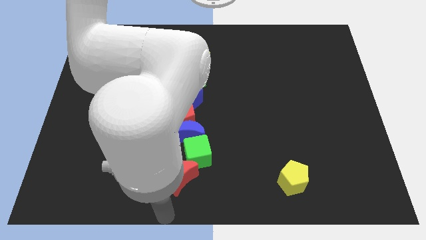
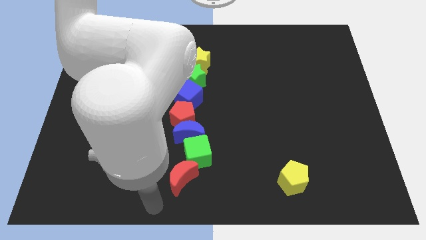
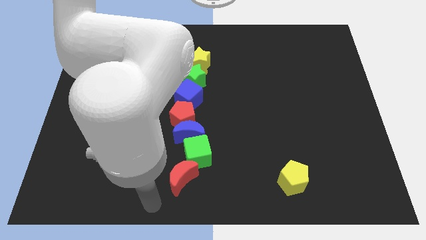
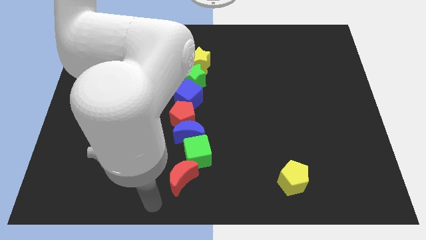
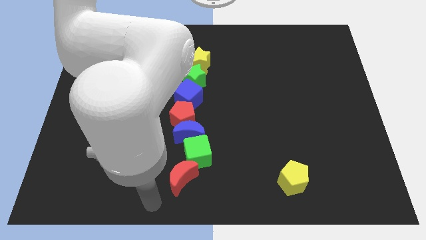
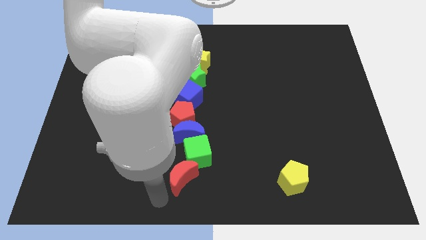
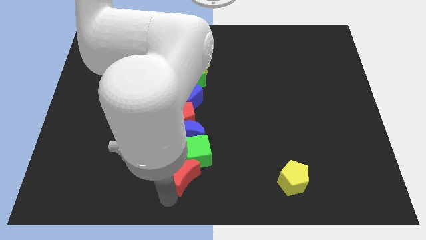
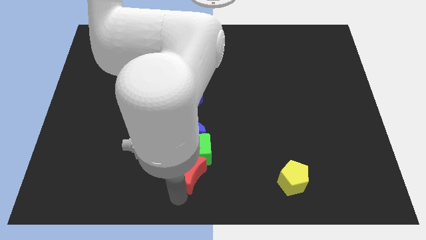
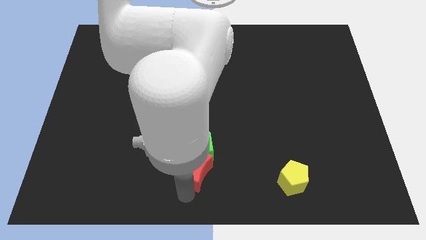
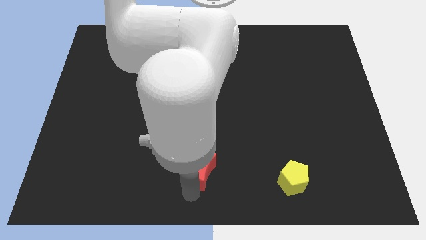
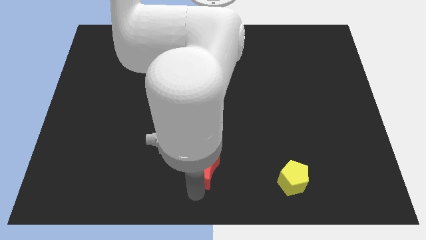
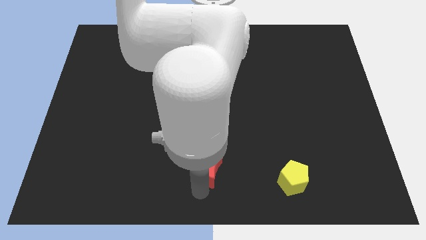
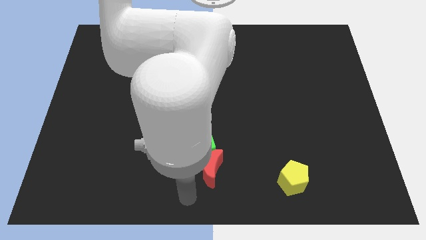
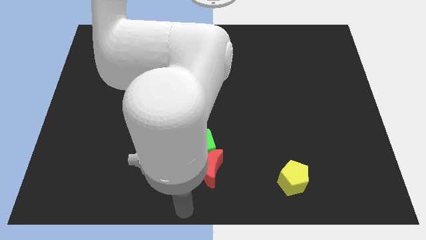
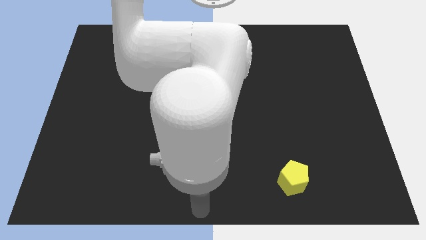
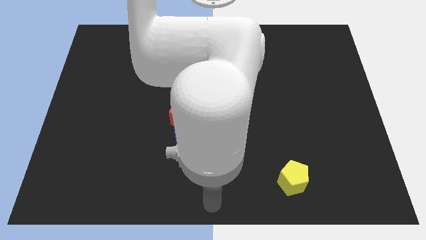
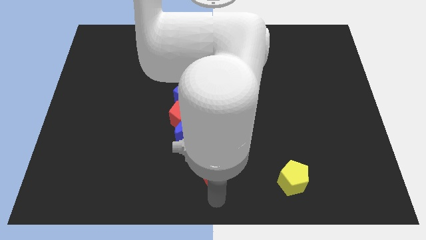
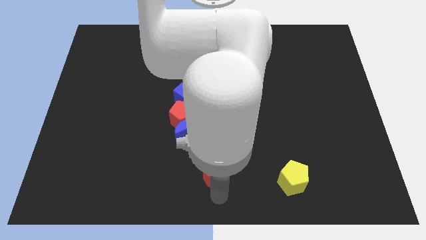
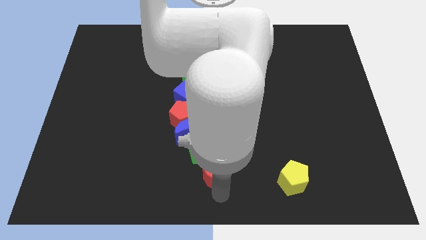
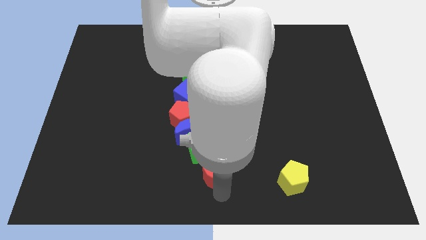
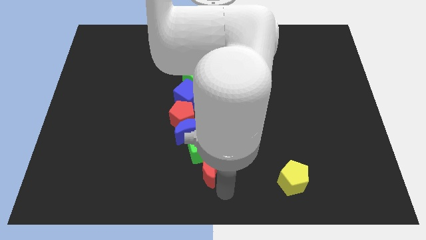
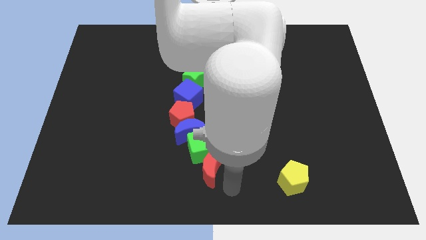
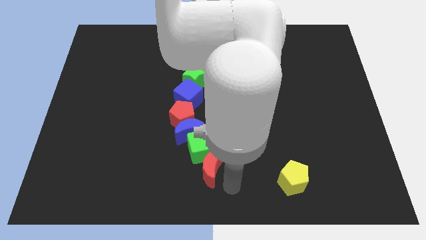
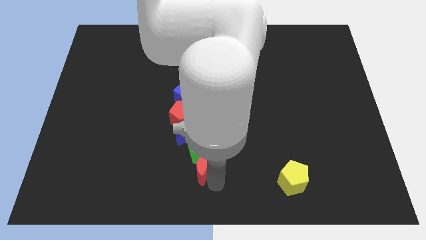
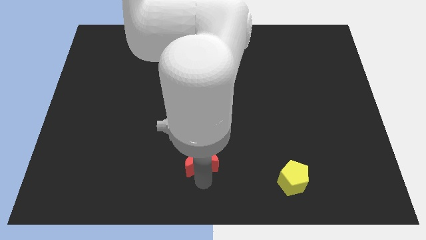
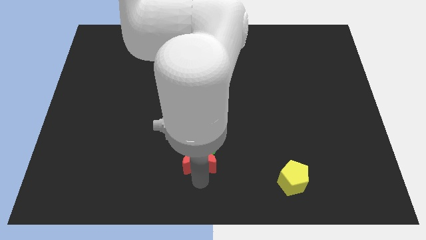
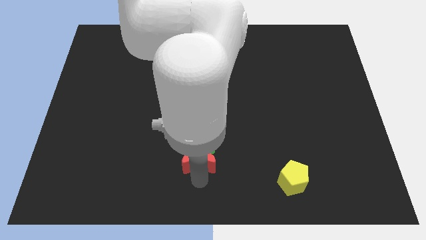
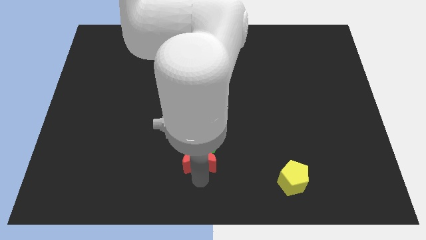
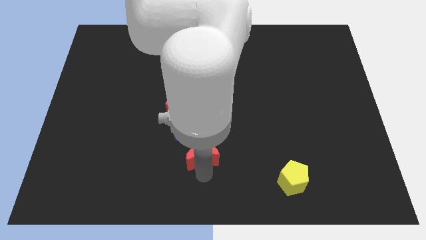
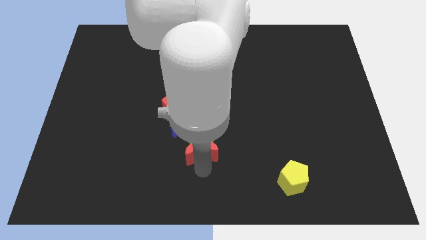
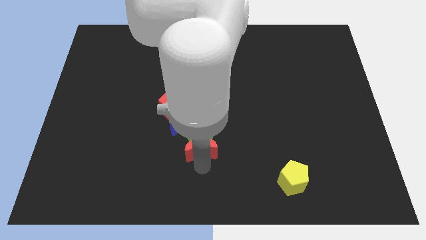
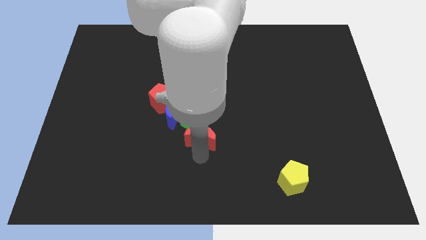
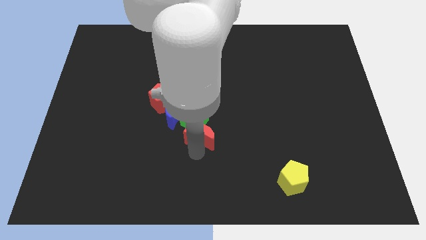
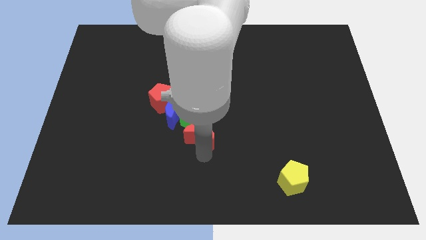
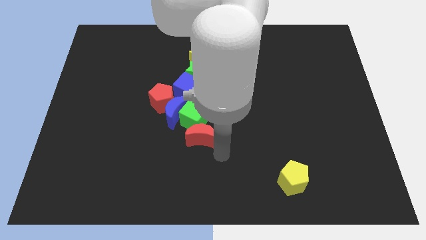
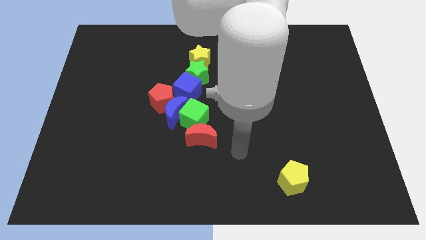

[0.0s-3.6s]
move red moon slightly up

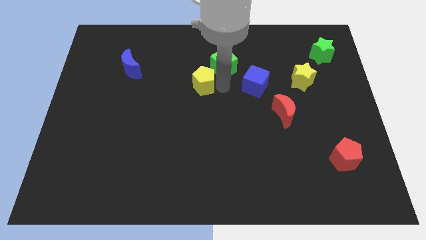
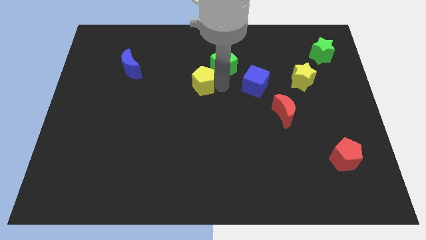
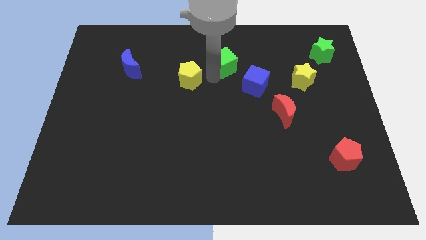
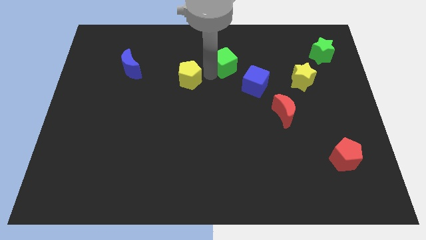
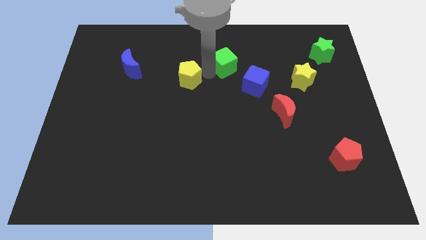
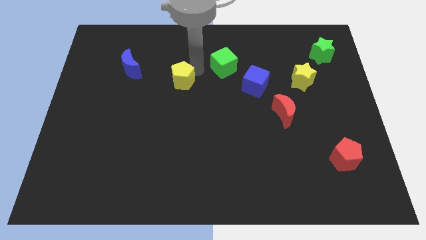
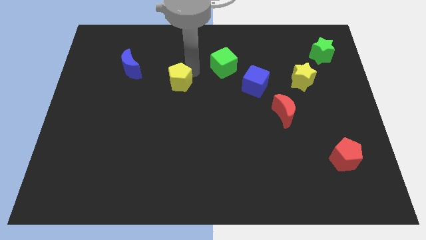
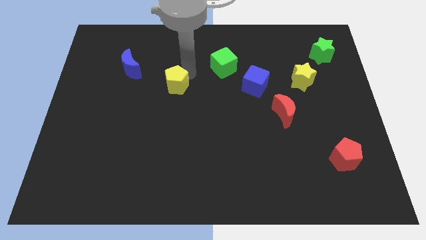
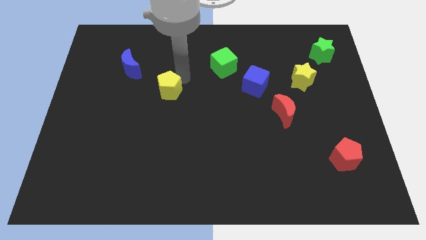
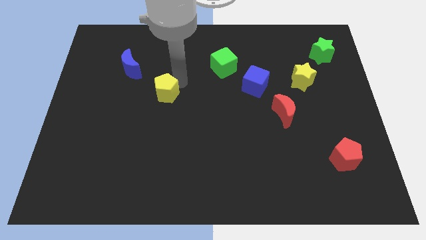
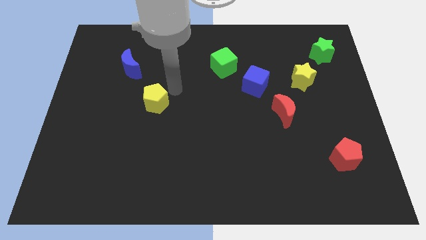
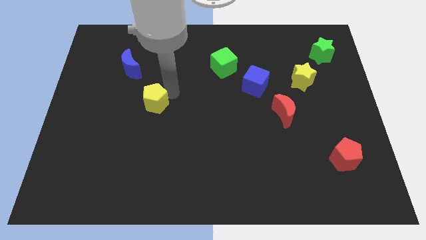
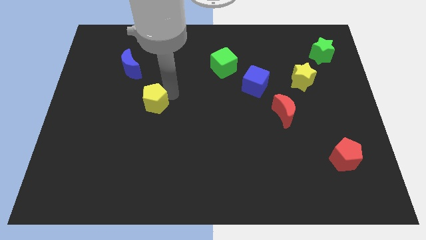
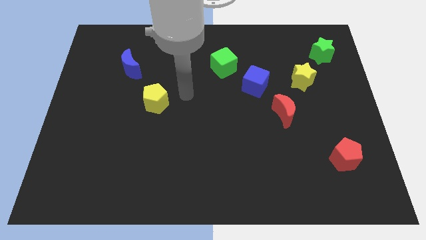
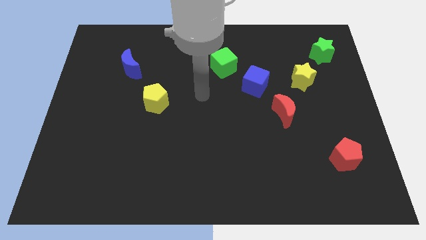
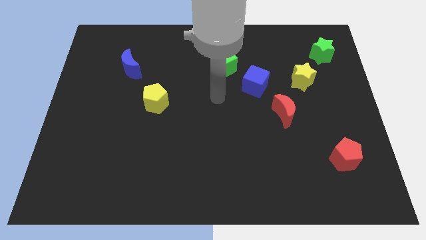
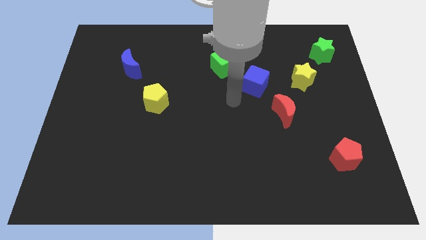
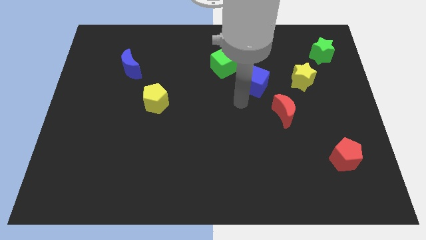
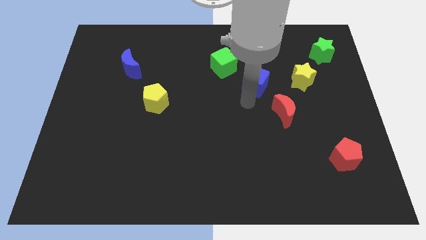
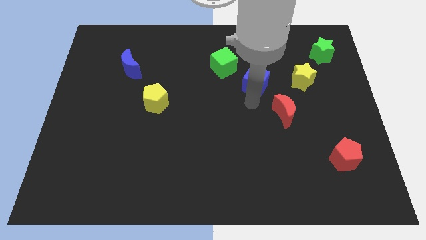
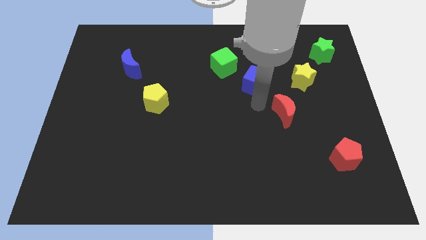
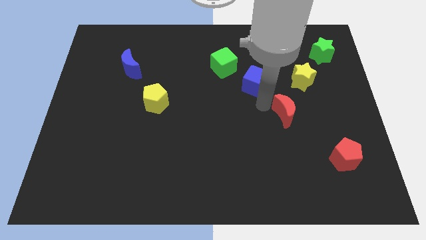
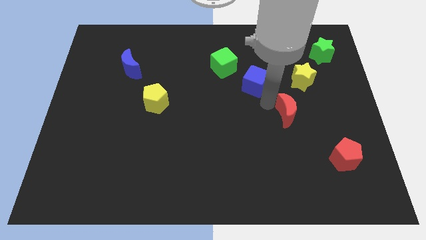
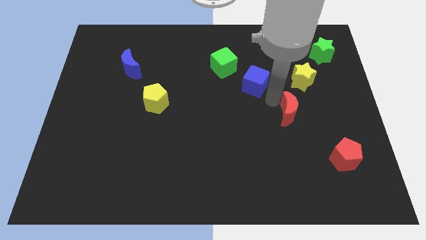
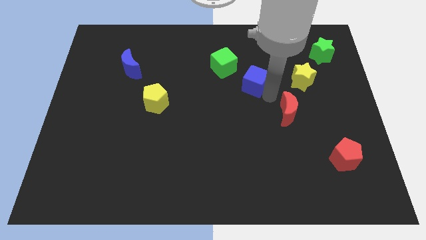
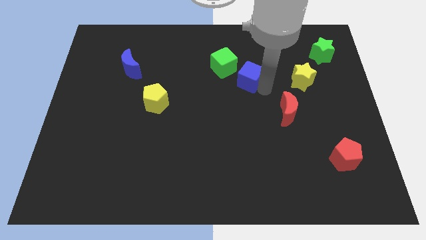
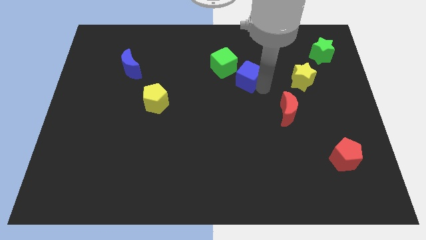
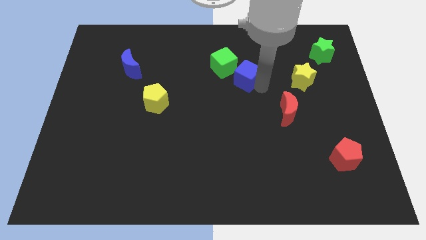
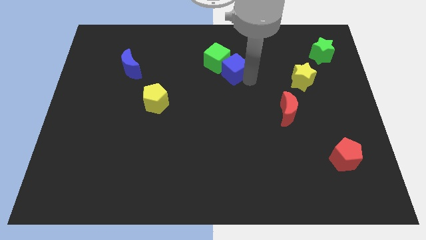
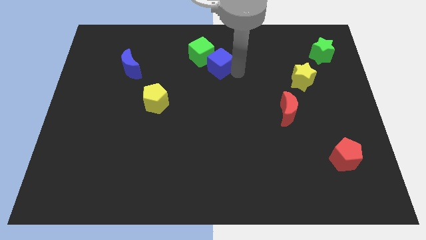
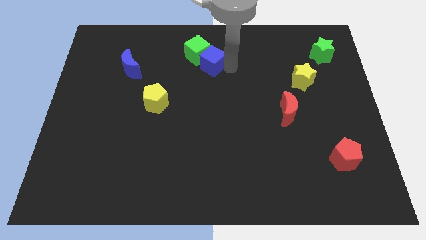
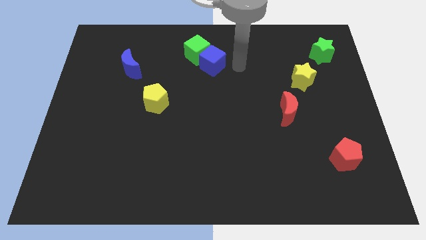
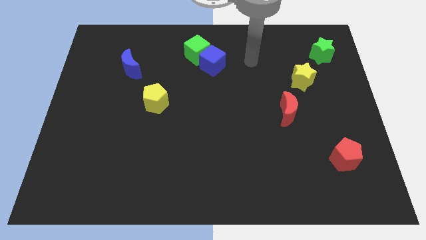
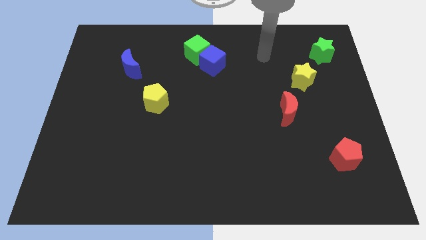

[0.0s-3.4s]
push the yellow pentagon slightly downwards

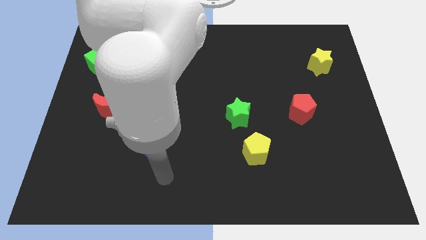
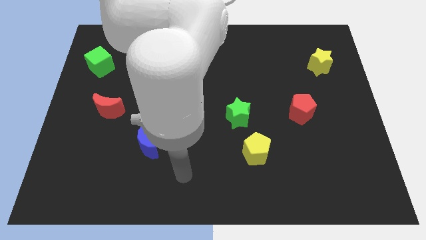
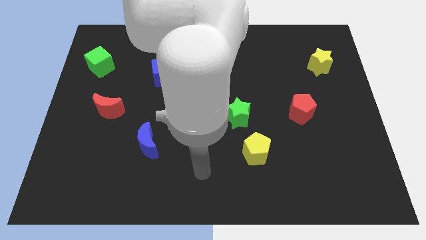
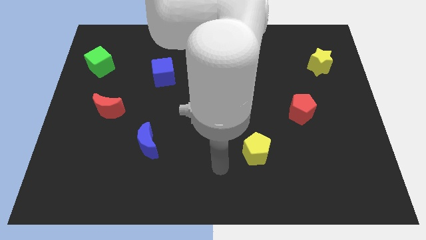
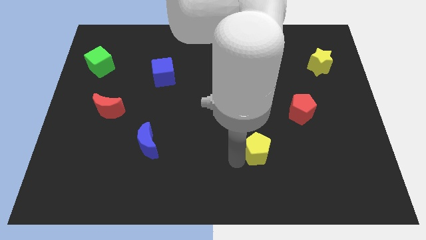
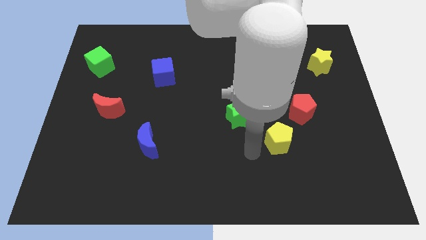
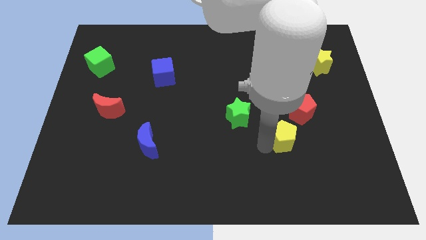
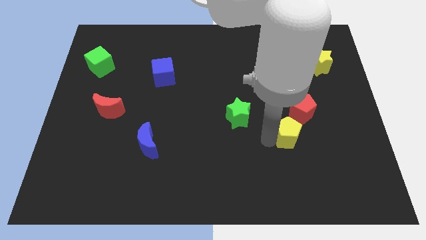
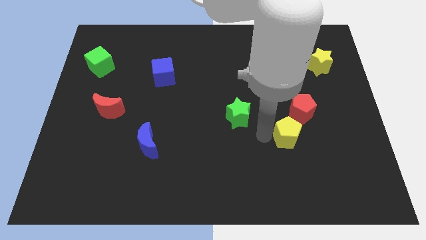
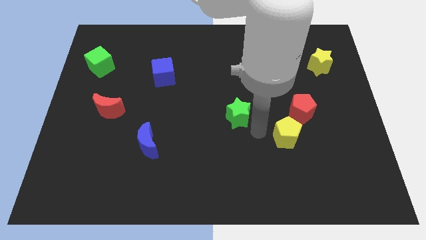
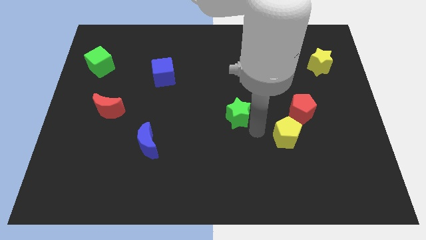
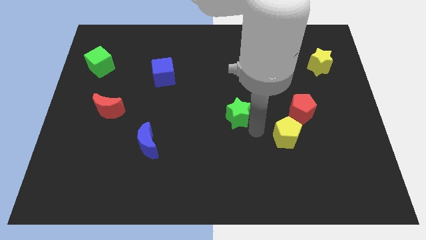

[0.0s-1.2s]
push the yellow pentagon to the bottom left side of the red pentagon

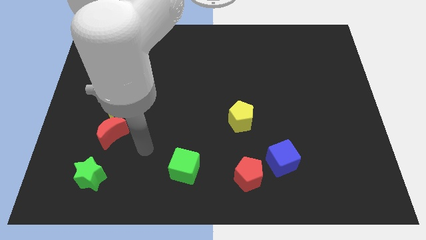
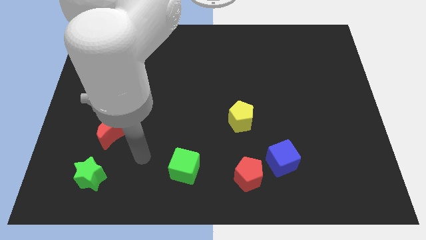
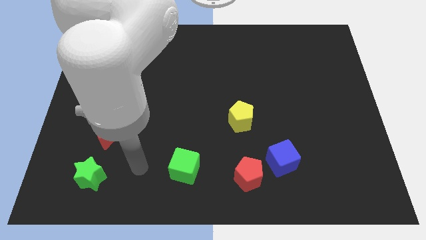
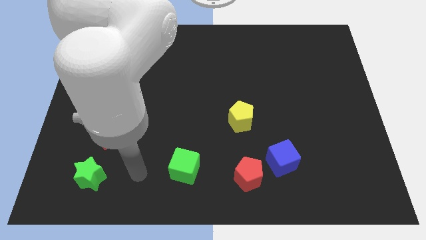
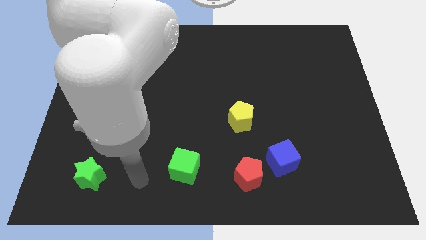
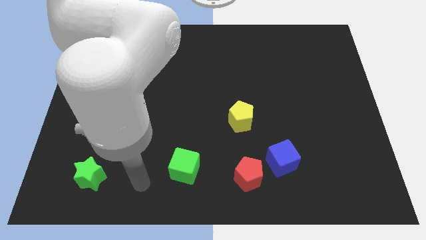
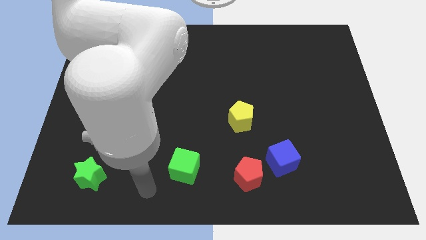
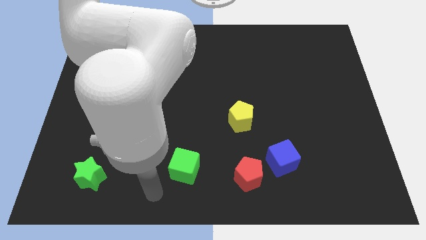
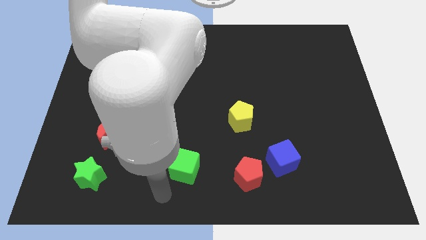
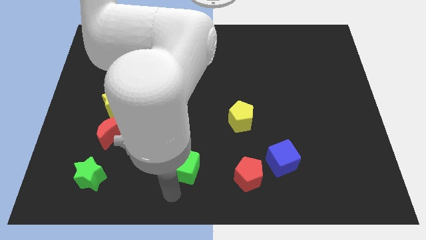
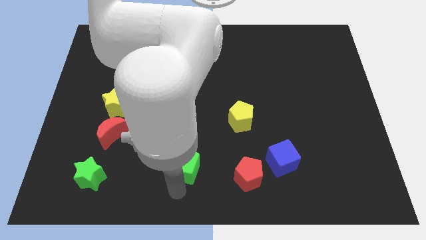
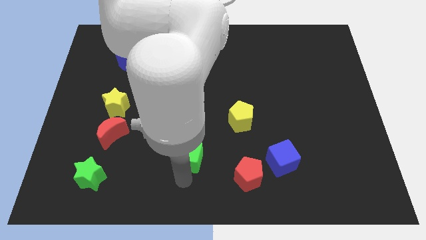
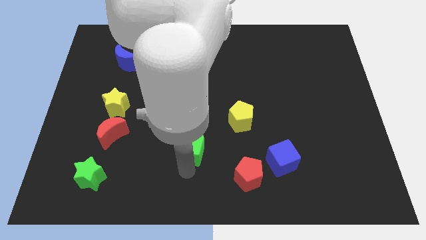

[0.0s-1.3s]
move the arm towards bottom of the green cube
